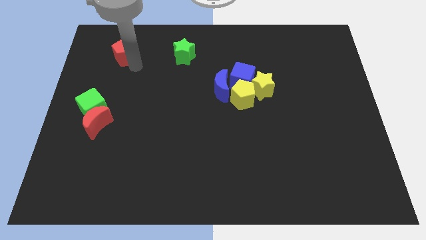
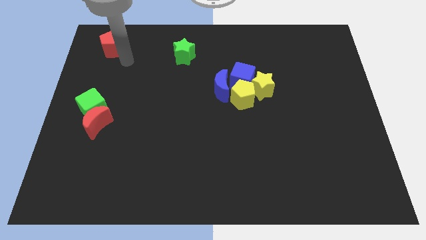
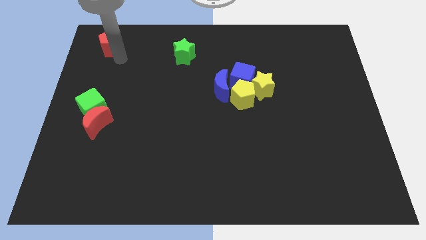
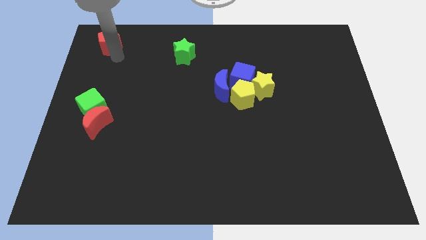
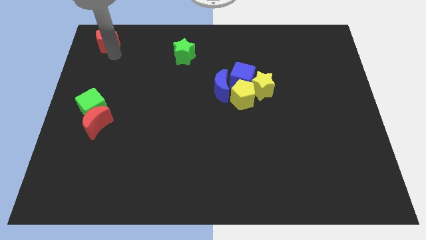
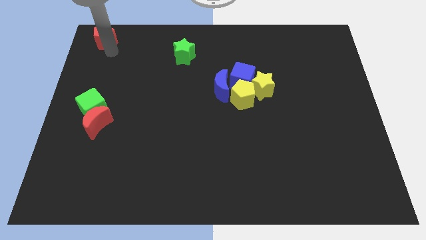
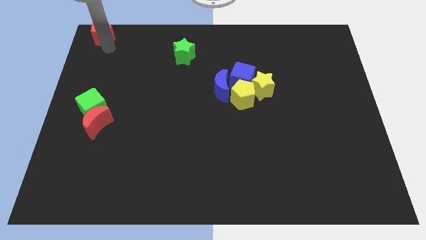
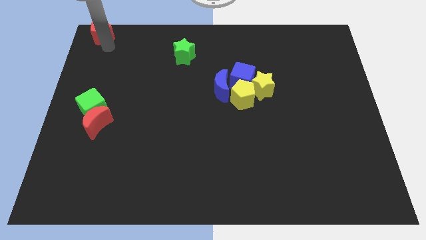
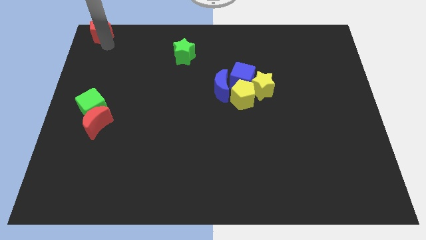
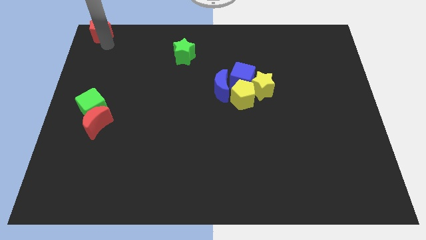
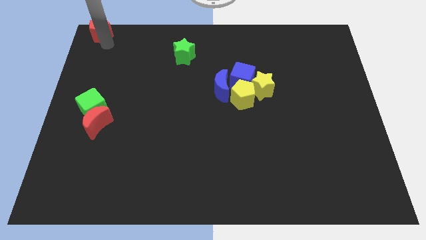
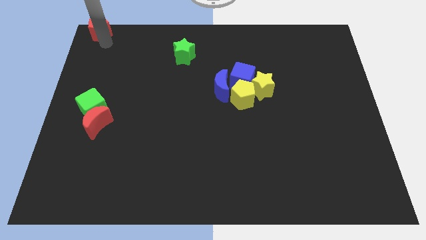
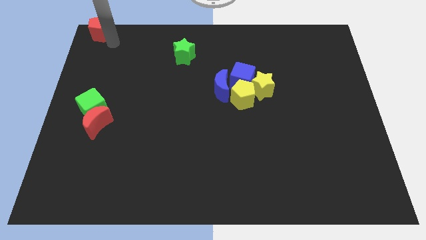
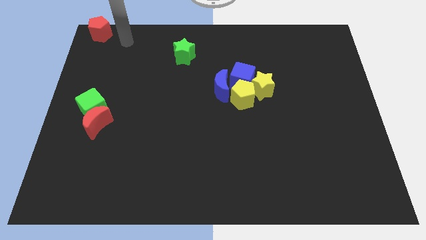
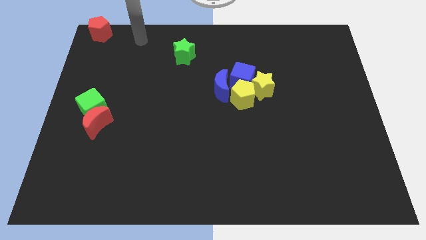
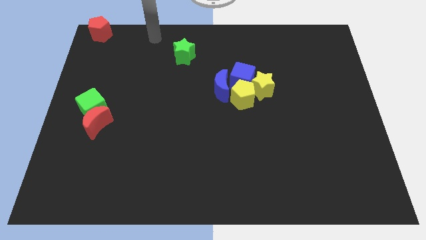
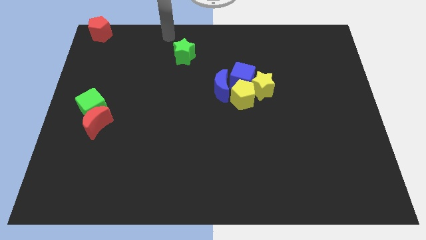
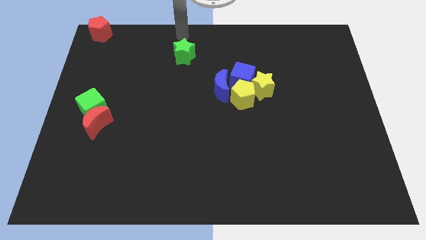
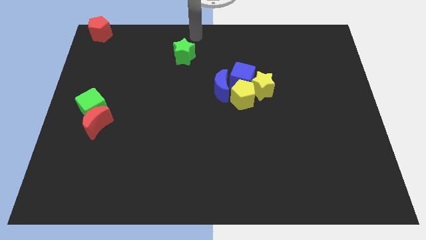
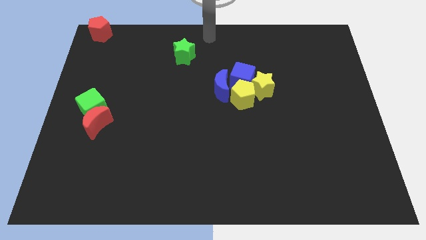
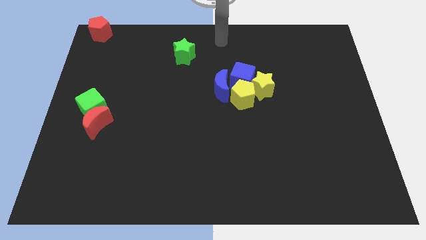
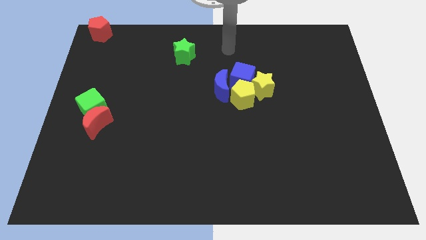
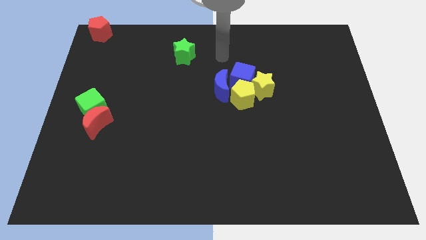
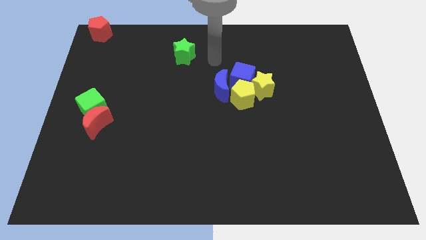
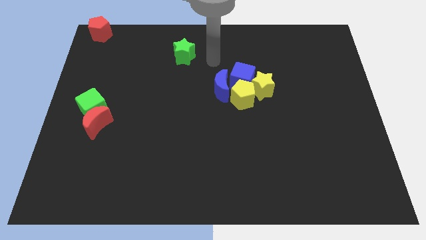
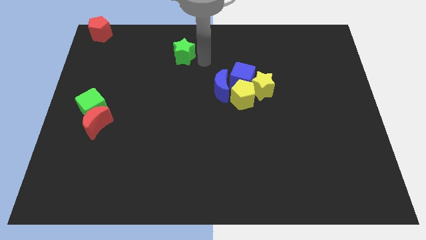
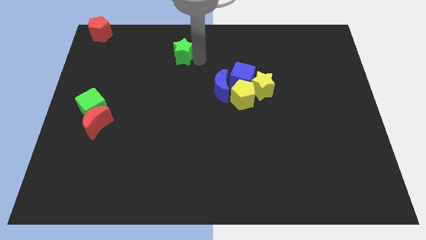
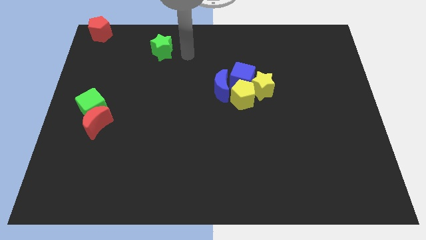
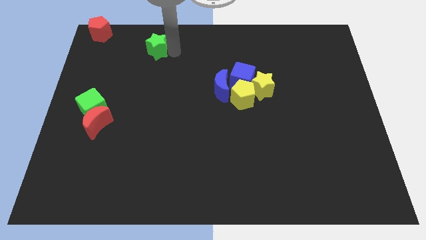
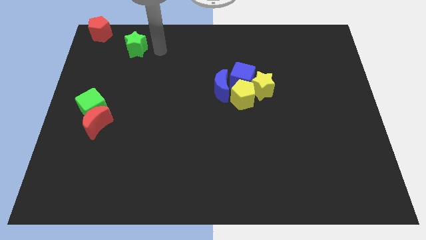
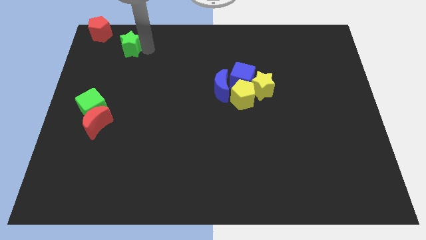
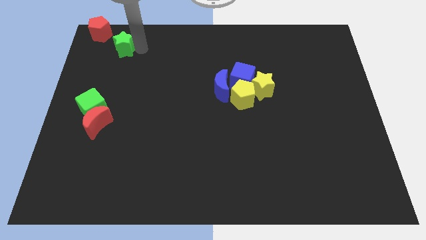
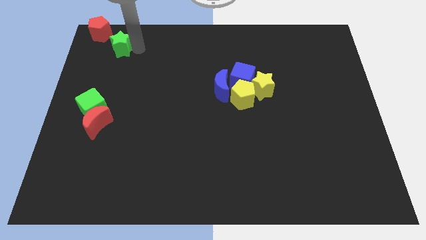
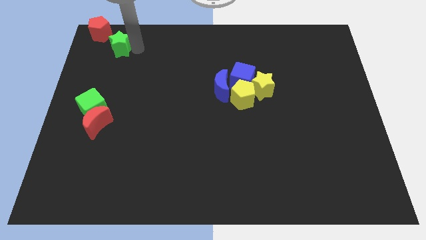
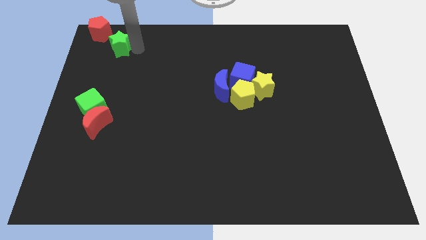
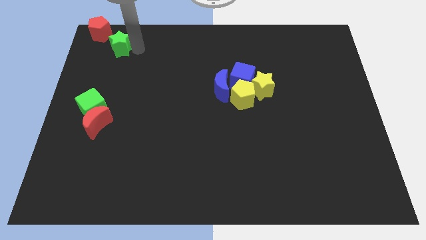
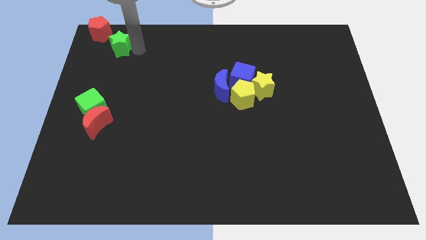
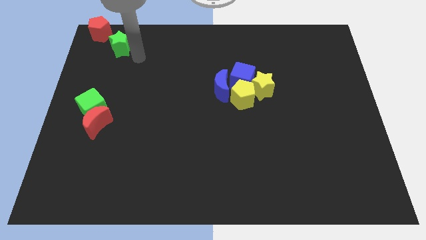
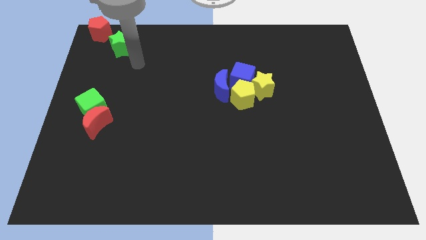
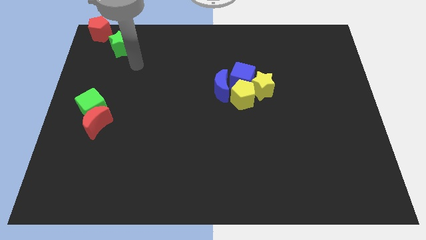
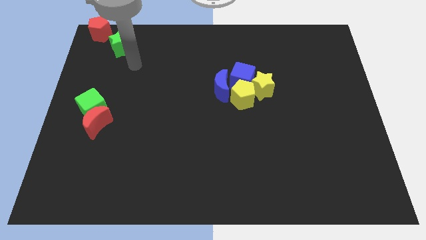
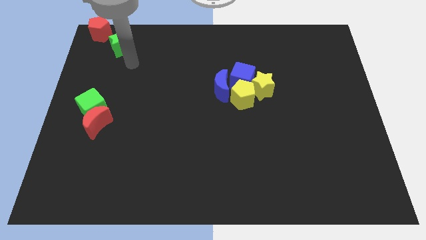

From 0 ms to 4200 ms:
place the red pentagon and green star at the top left corner

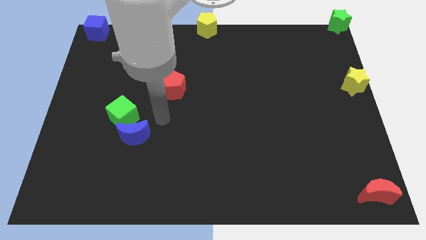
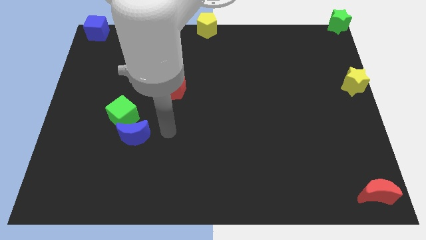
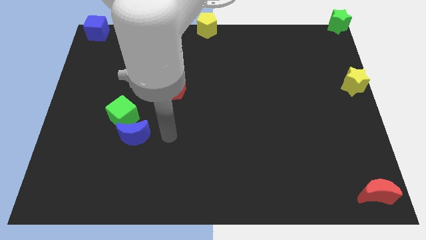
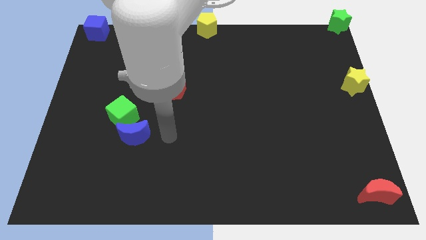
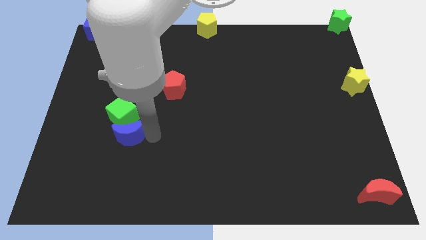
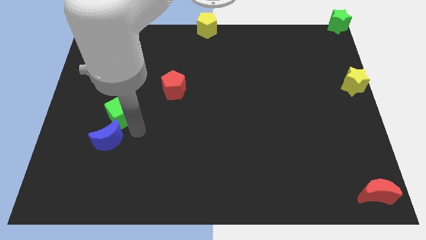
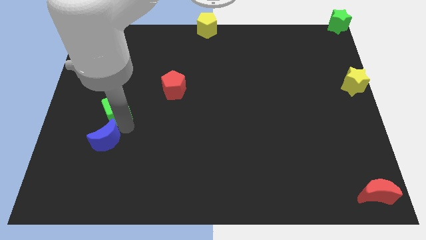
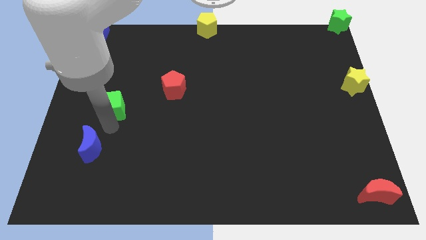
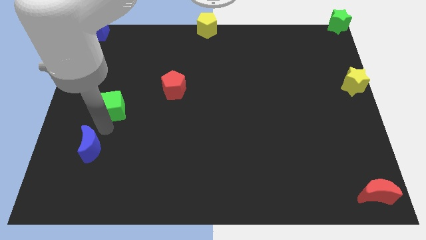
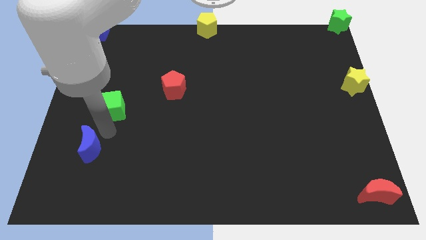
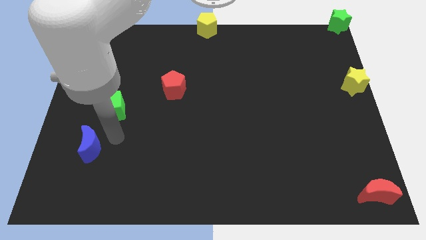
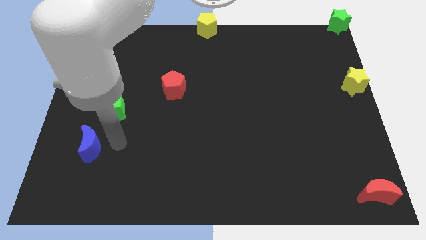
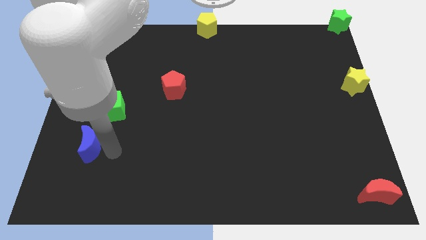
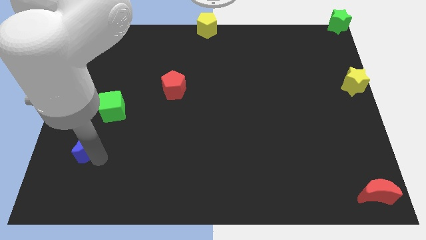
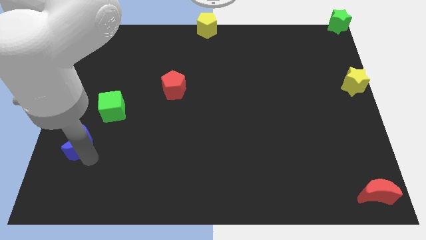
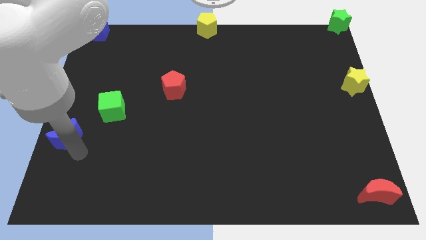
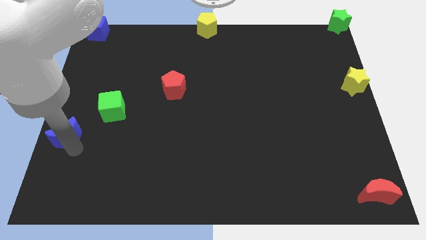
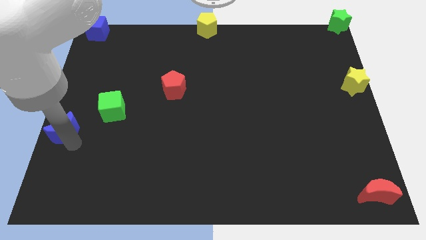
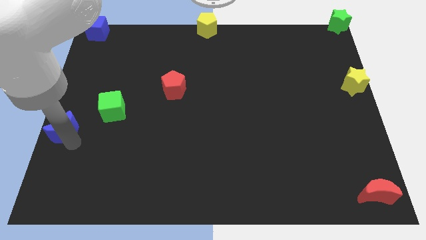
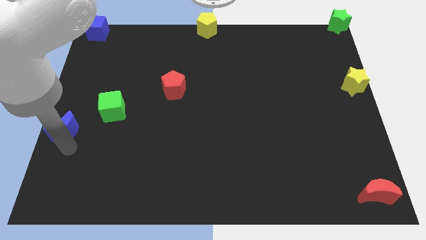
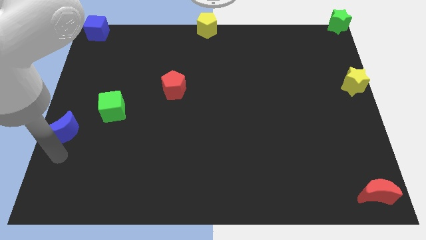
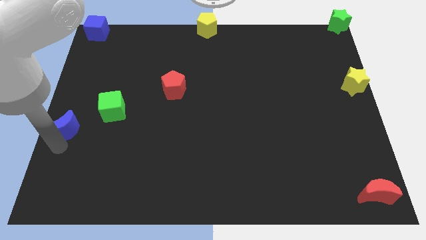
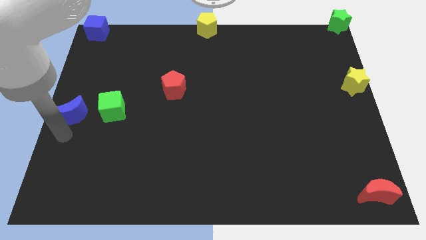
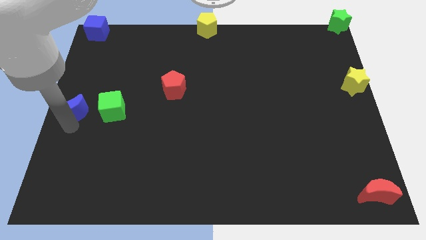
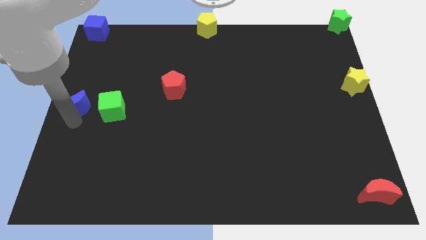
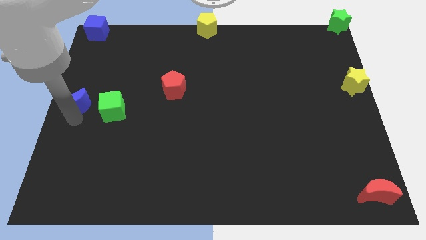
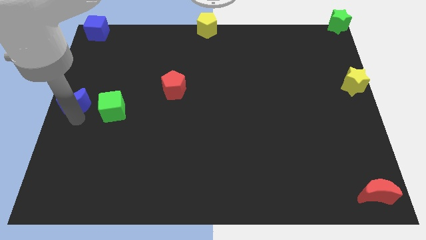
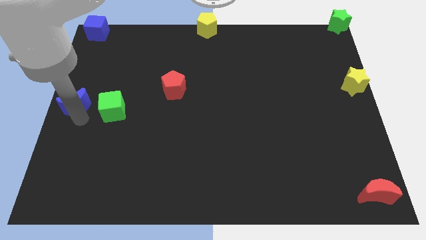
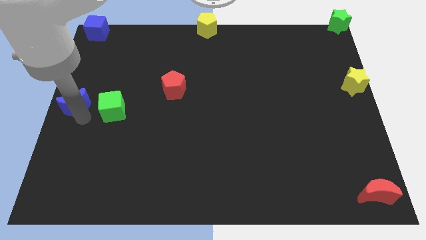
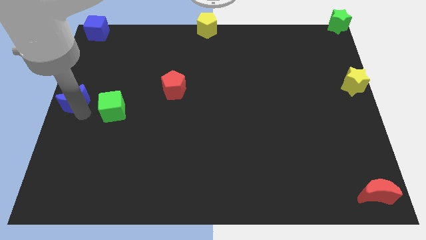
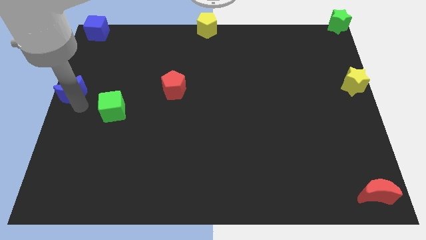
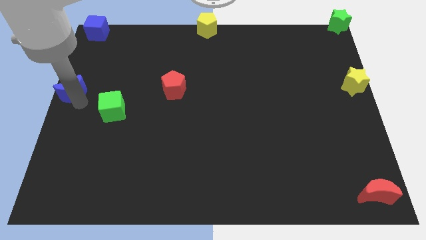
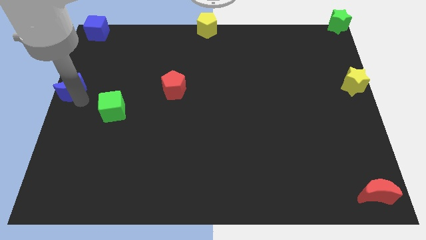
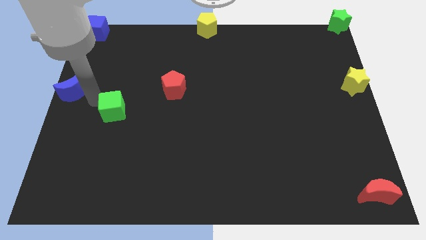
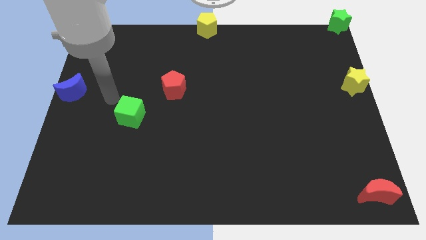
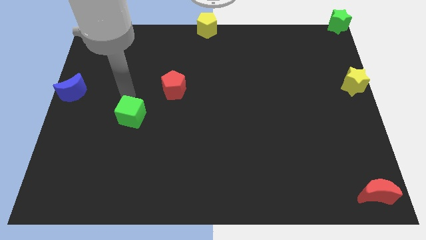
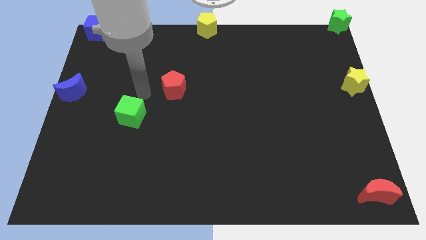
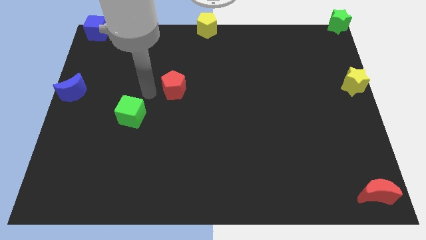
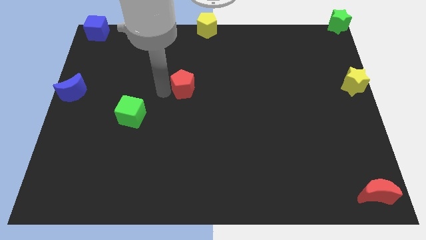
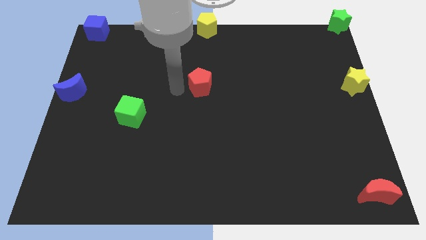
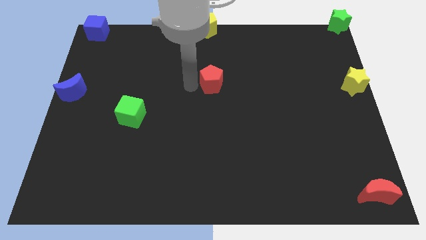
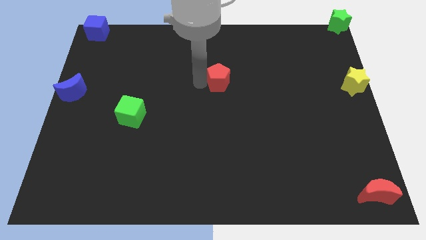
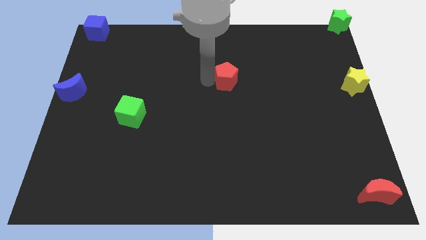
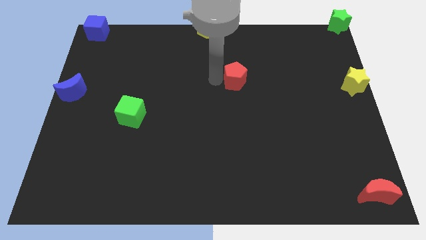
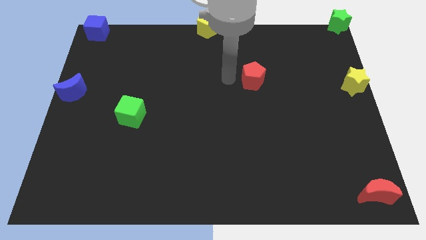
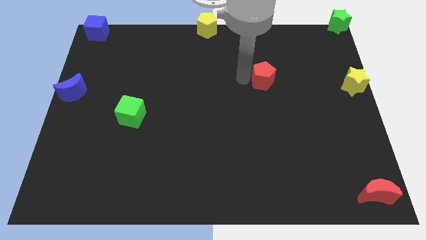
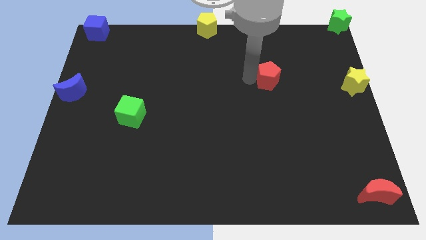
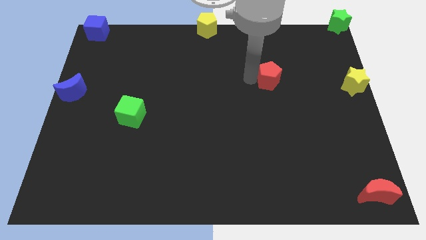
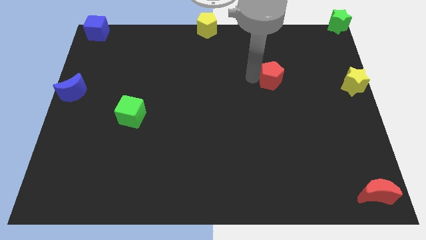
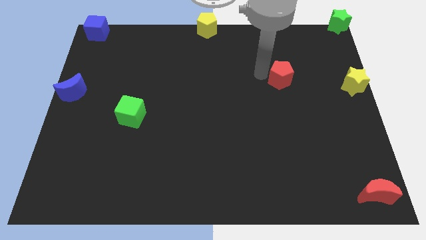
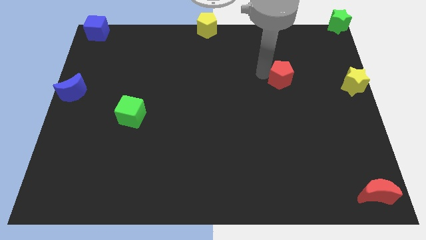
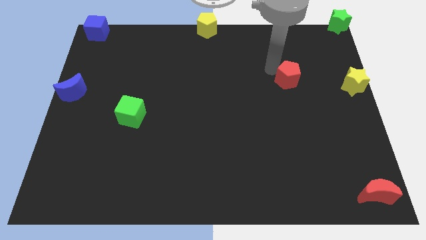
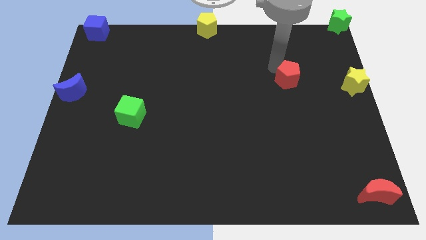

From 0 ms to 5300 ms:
slide the red pentagon towards the yellow star
